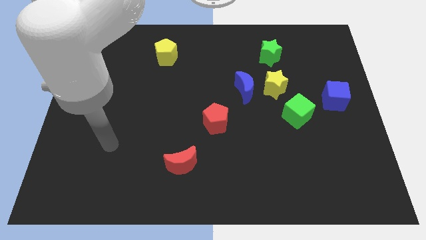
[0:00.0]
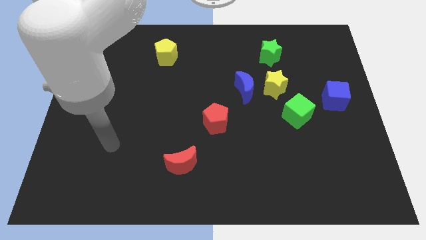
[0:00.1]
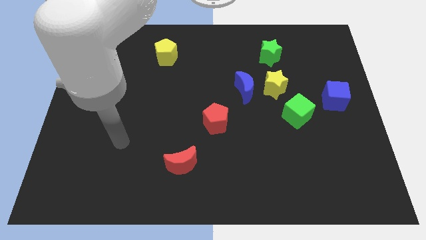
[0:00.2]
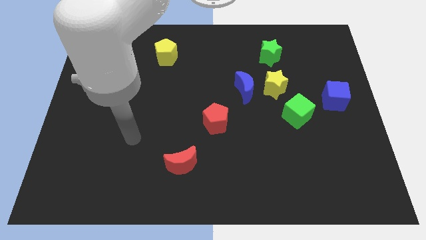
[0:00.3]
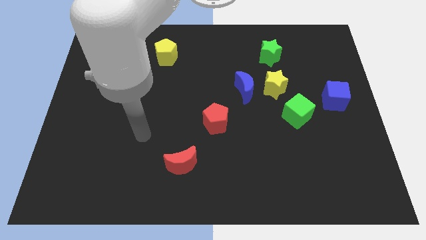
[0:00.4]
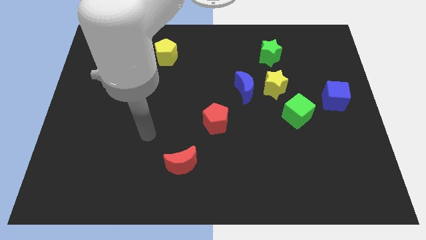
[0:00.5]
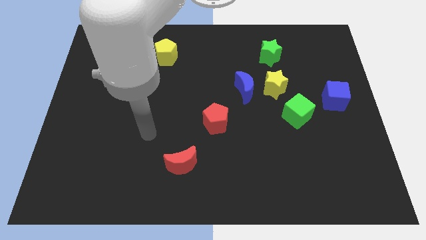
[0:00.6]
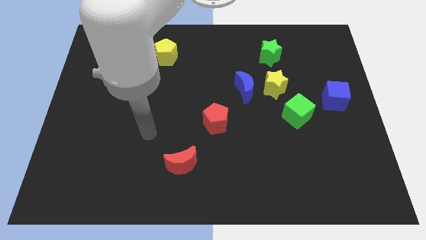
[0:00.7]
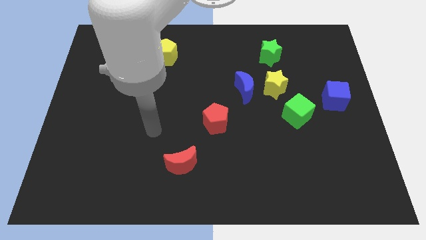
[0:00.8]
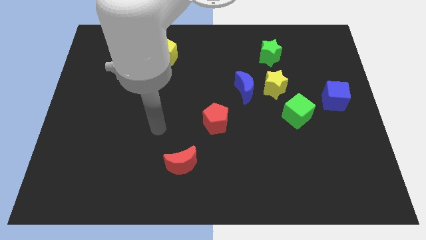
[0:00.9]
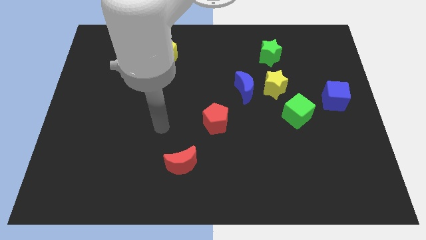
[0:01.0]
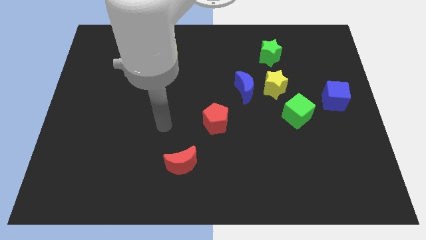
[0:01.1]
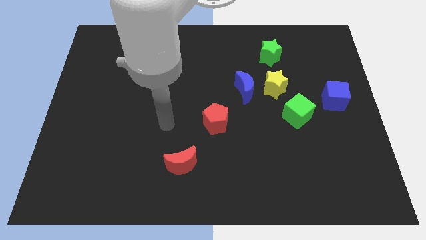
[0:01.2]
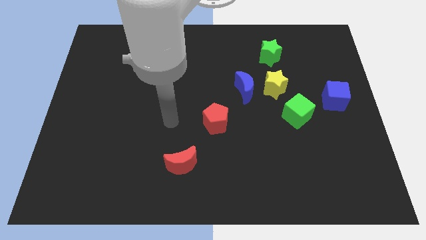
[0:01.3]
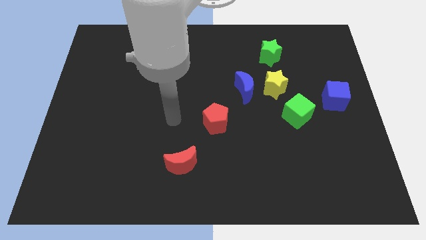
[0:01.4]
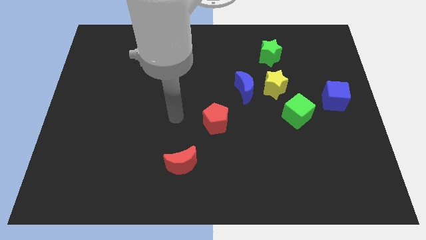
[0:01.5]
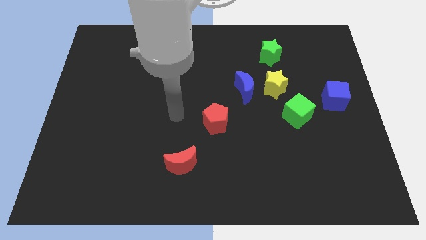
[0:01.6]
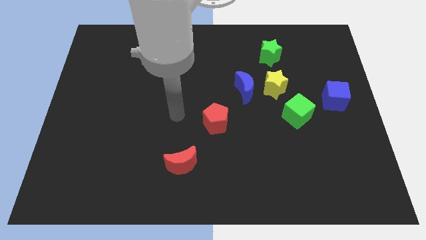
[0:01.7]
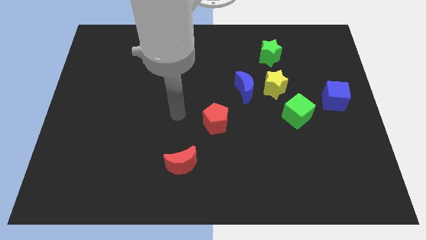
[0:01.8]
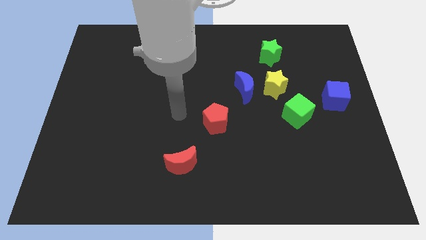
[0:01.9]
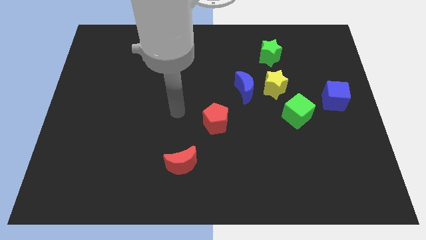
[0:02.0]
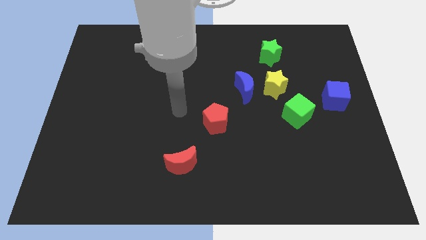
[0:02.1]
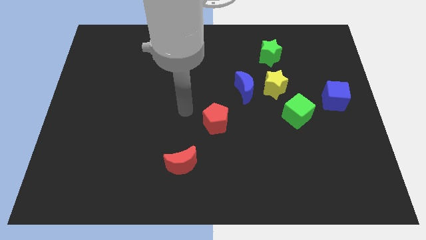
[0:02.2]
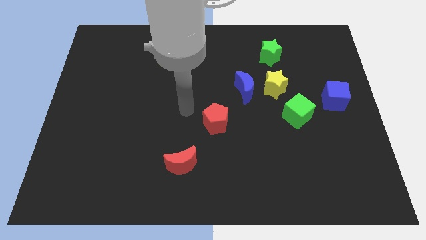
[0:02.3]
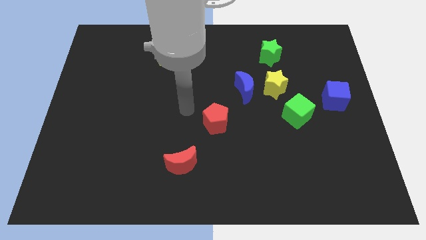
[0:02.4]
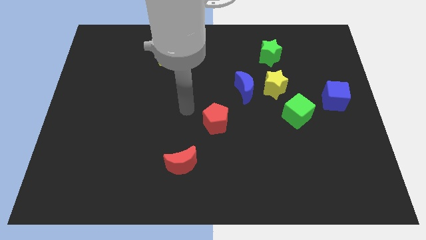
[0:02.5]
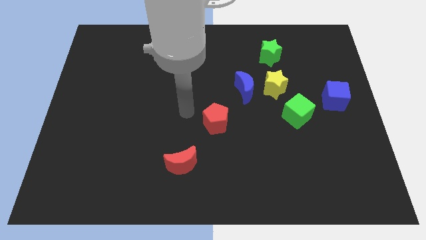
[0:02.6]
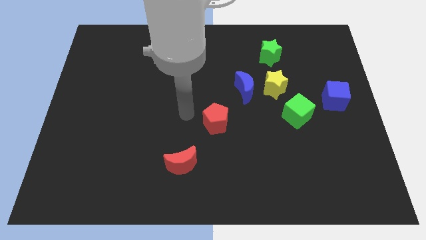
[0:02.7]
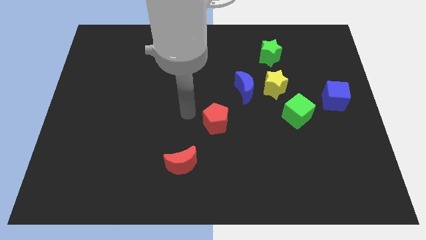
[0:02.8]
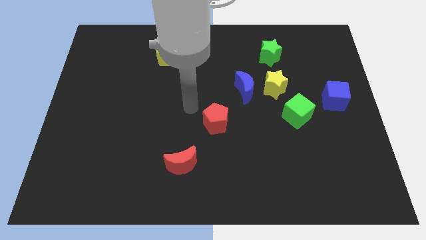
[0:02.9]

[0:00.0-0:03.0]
move your hand towards red pentagon

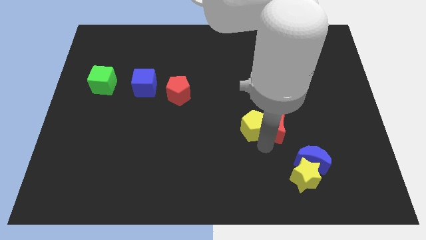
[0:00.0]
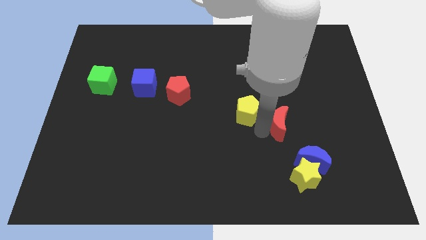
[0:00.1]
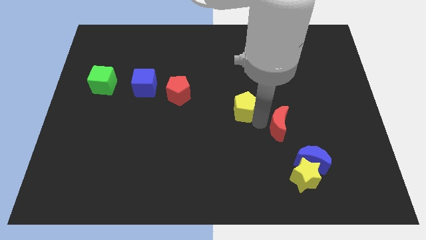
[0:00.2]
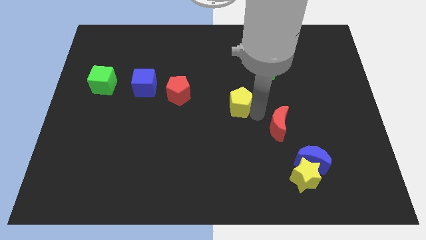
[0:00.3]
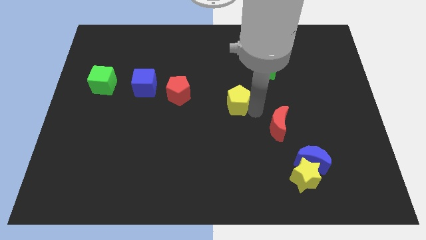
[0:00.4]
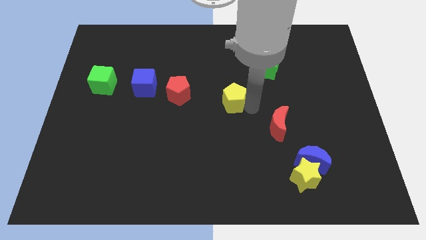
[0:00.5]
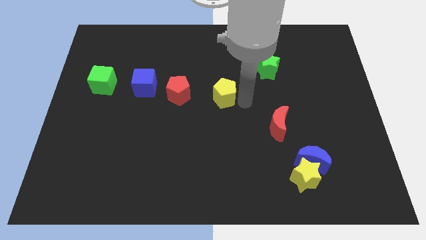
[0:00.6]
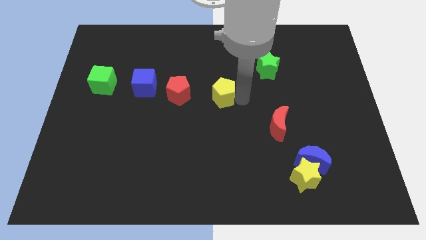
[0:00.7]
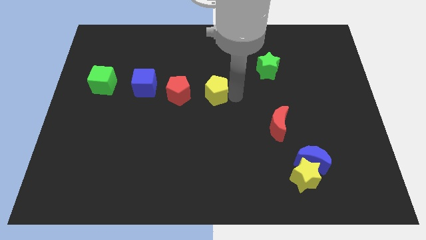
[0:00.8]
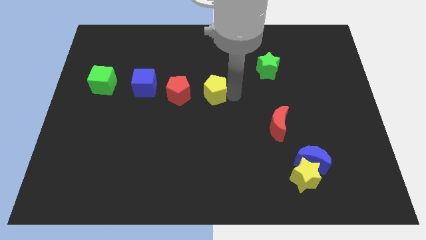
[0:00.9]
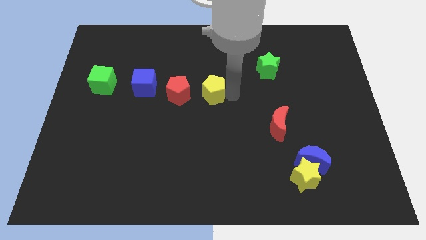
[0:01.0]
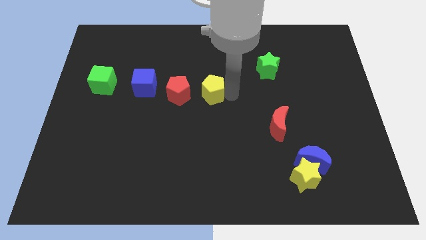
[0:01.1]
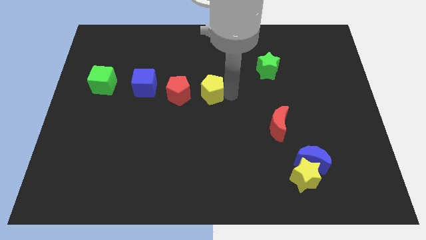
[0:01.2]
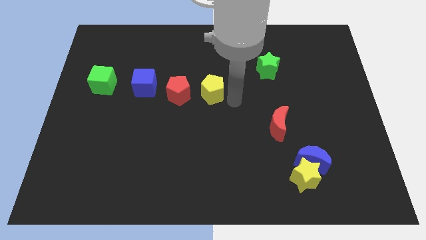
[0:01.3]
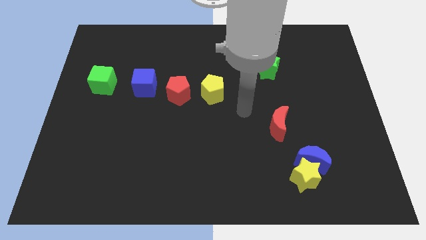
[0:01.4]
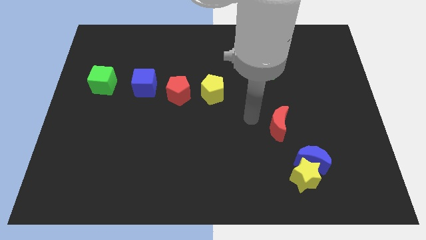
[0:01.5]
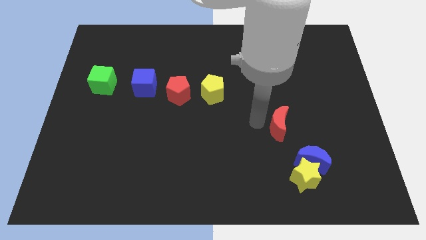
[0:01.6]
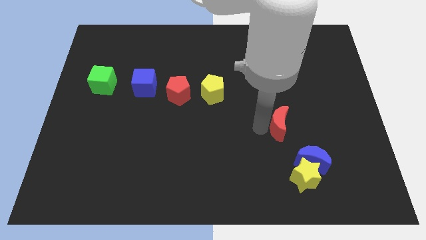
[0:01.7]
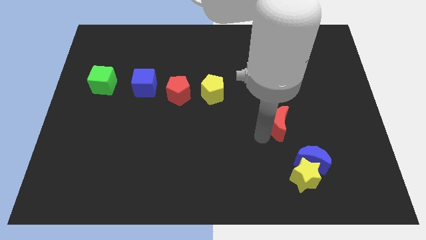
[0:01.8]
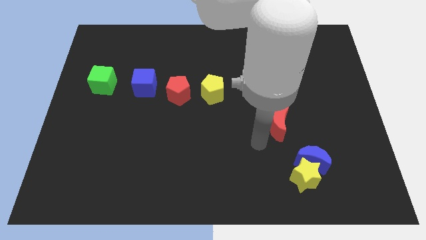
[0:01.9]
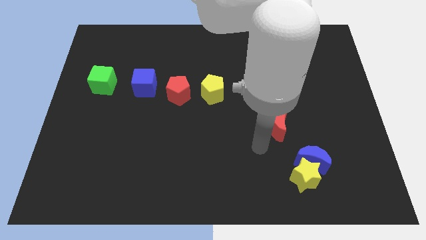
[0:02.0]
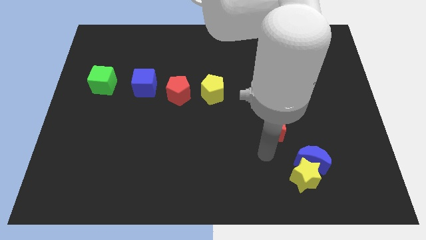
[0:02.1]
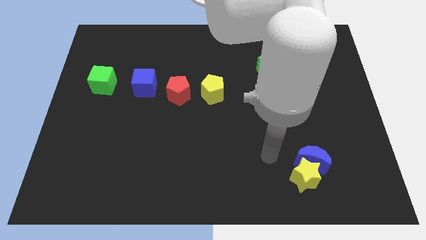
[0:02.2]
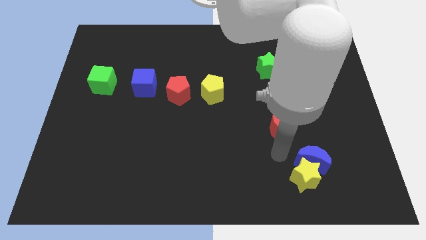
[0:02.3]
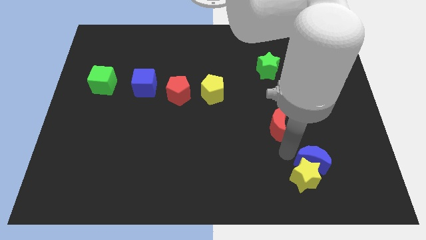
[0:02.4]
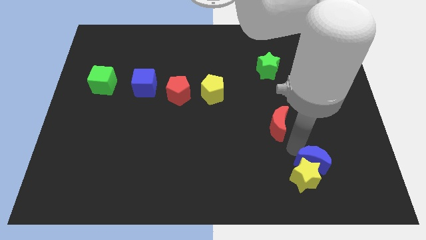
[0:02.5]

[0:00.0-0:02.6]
push the yellow pentagon towards the top left

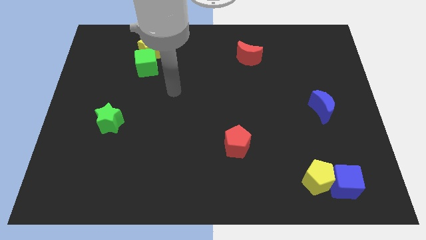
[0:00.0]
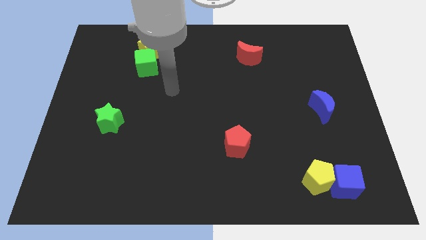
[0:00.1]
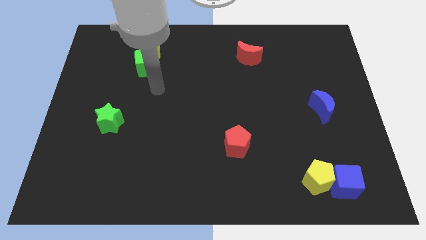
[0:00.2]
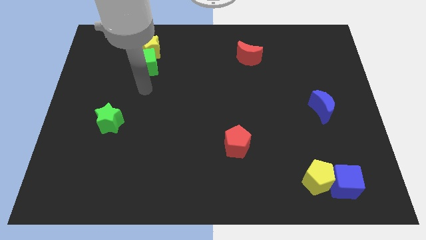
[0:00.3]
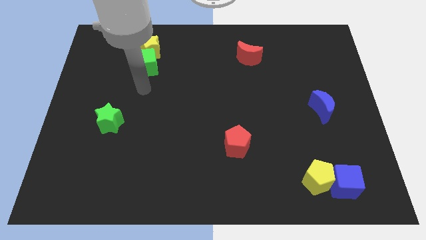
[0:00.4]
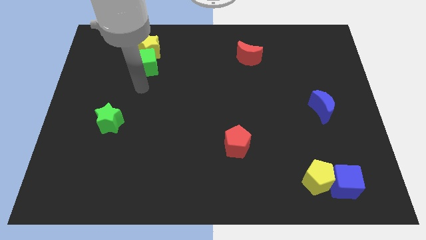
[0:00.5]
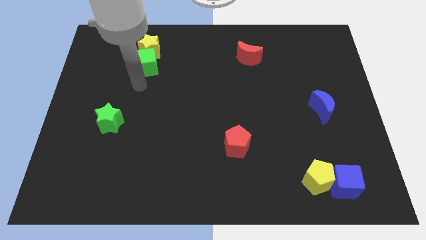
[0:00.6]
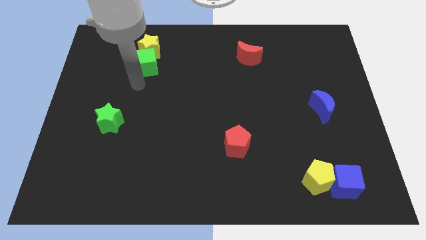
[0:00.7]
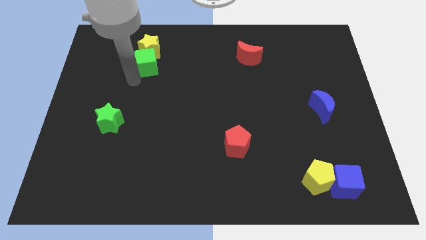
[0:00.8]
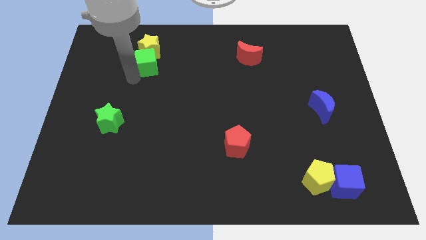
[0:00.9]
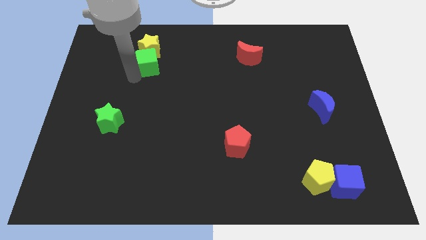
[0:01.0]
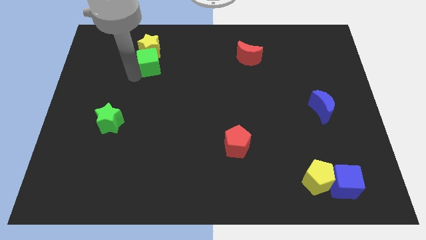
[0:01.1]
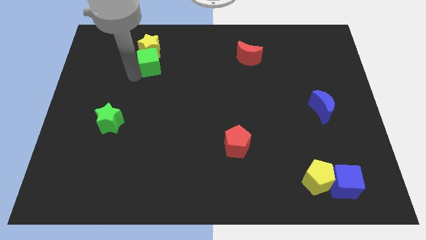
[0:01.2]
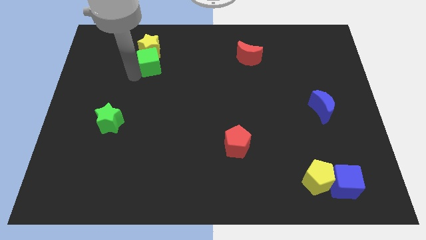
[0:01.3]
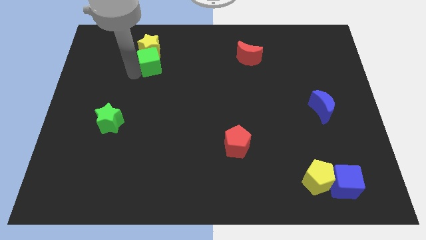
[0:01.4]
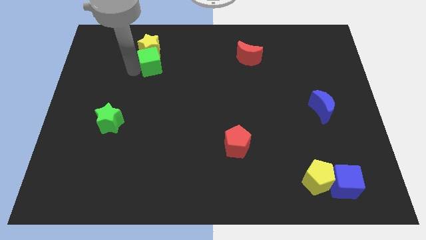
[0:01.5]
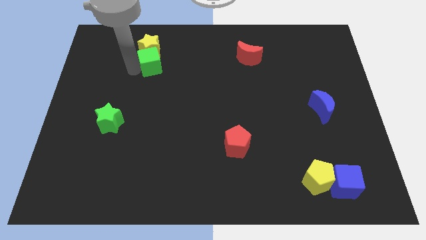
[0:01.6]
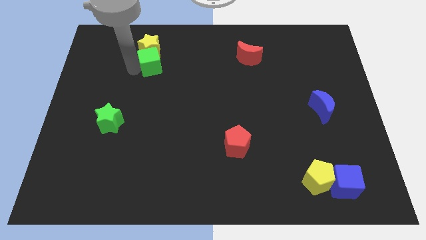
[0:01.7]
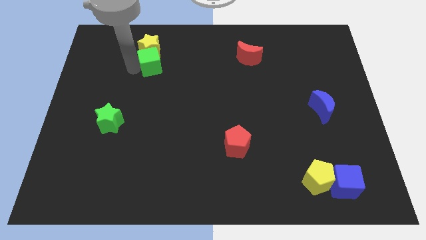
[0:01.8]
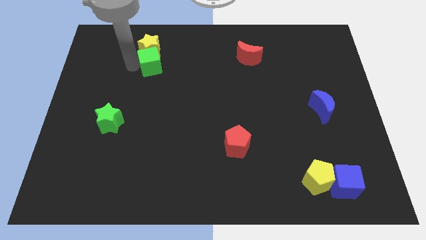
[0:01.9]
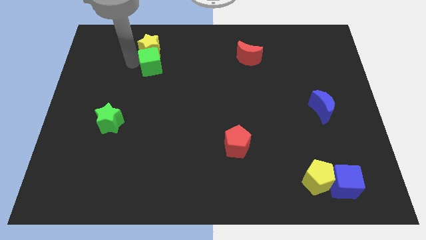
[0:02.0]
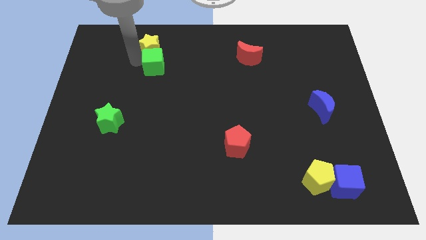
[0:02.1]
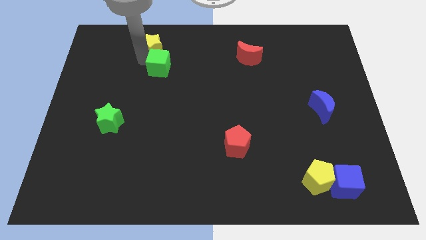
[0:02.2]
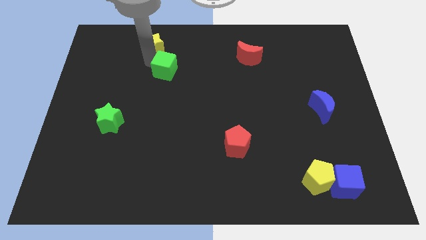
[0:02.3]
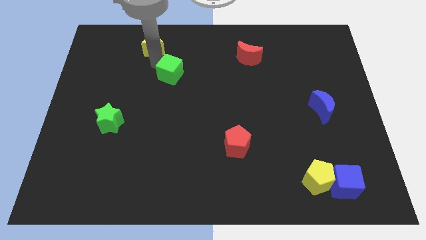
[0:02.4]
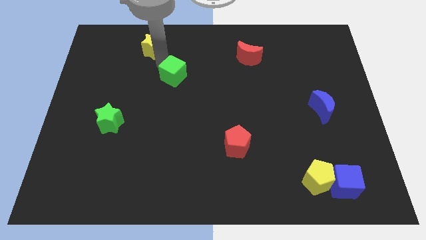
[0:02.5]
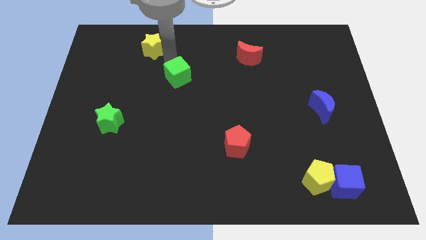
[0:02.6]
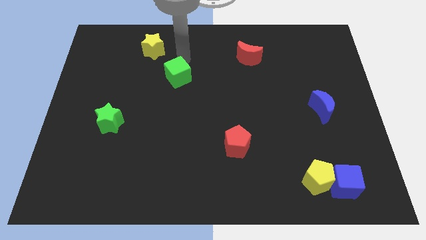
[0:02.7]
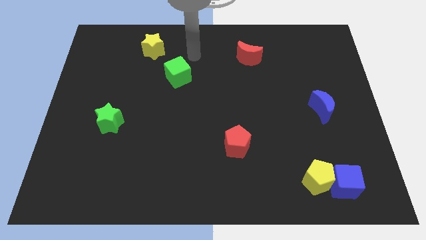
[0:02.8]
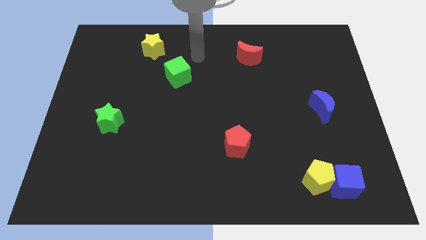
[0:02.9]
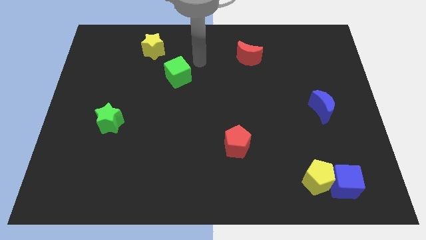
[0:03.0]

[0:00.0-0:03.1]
move the green cube away from the yellow star

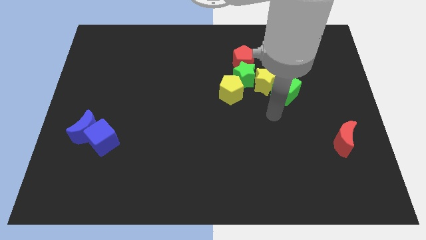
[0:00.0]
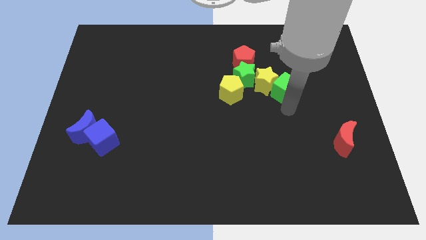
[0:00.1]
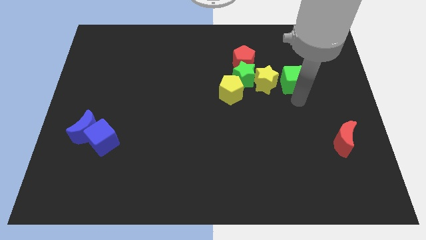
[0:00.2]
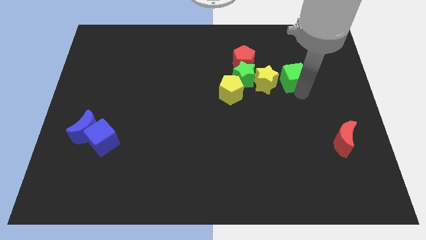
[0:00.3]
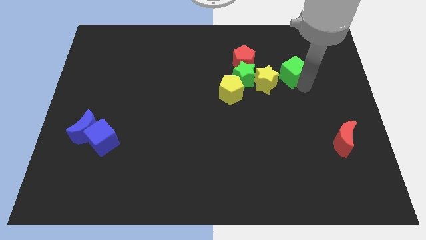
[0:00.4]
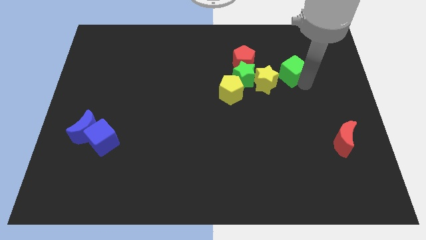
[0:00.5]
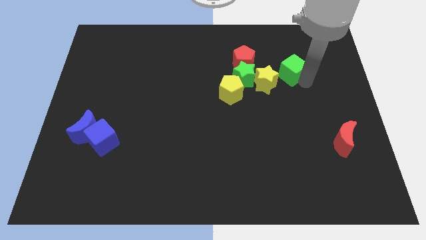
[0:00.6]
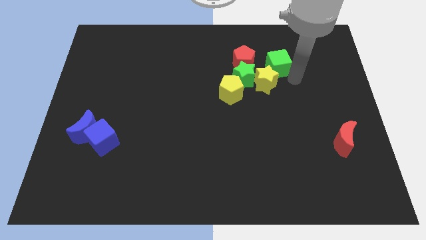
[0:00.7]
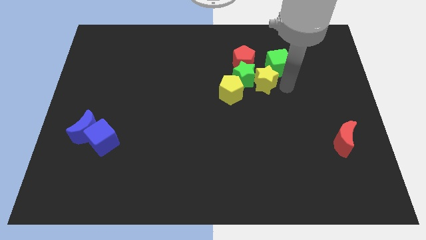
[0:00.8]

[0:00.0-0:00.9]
slide the green cube diagonally to the top right of the yellow star
